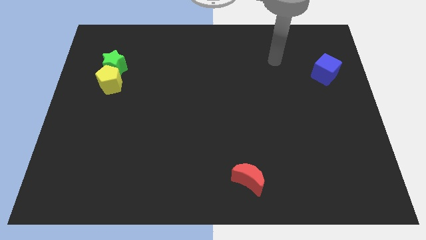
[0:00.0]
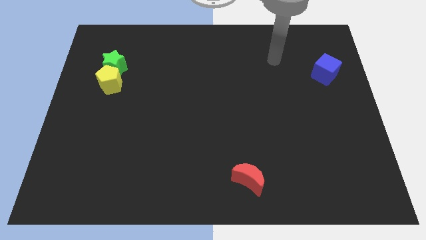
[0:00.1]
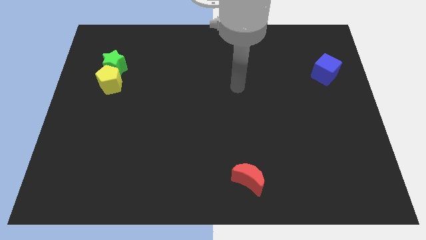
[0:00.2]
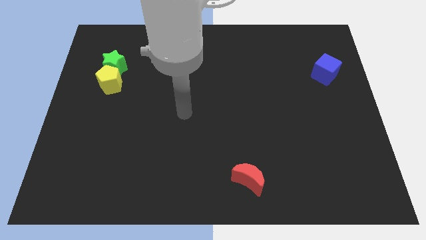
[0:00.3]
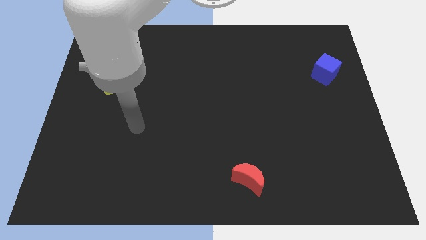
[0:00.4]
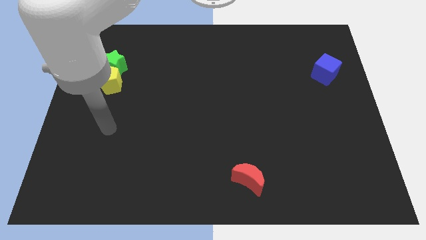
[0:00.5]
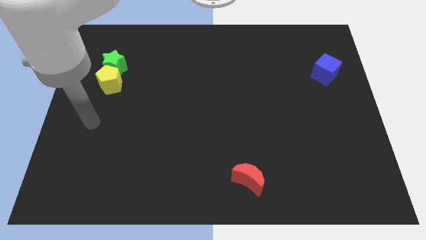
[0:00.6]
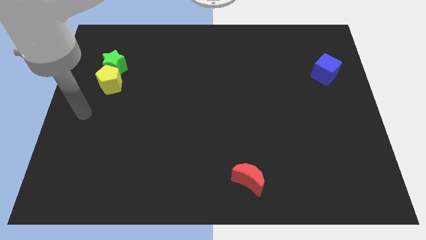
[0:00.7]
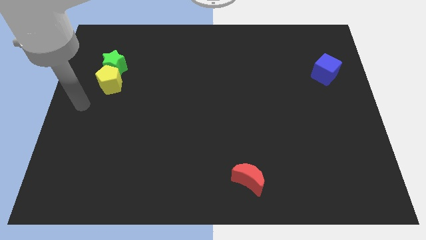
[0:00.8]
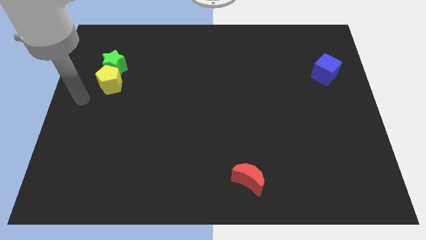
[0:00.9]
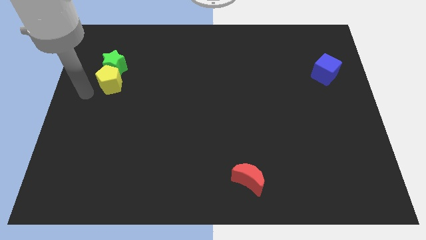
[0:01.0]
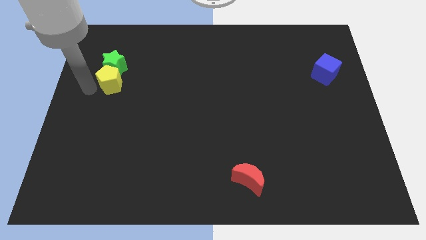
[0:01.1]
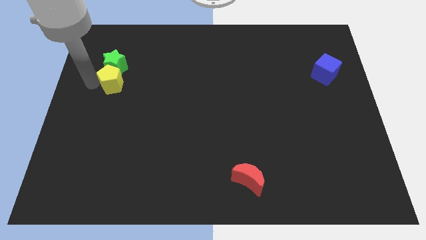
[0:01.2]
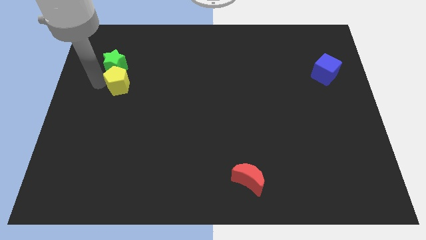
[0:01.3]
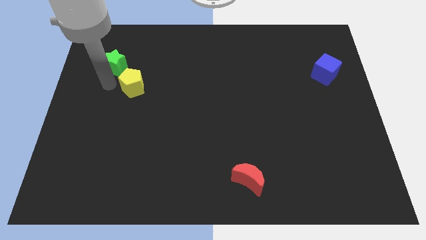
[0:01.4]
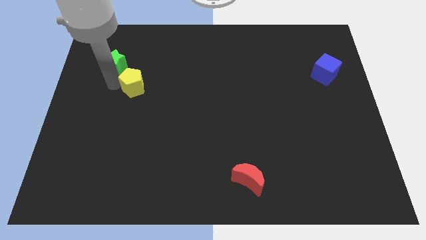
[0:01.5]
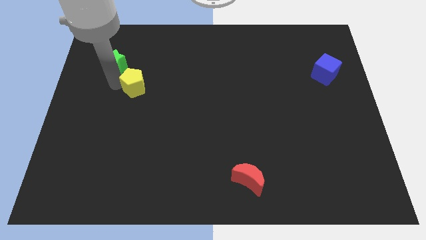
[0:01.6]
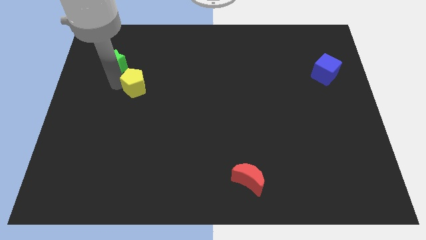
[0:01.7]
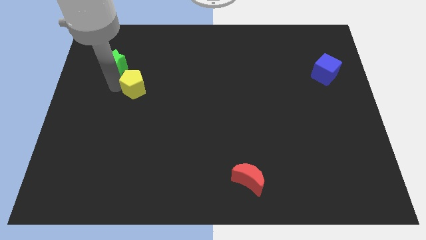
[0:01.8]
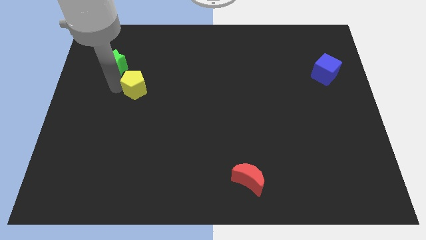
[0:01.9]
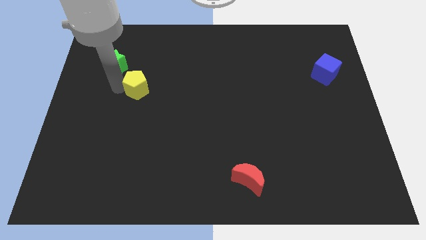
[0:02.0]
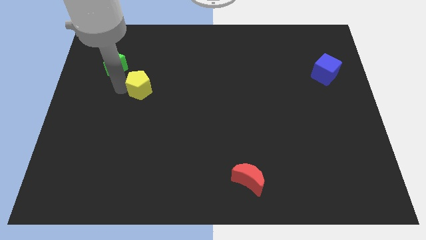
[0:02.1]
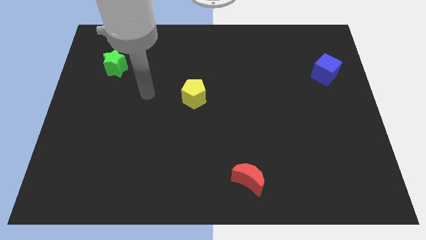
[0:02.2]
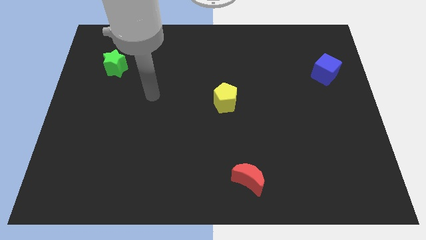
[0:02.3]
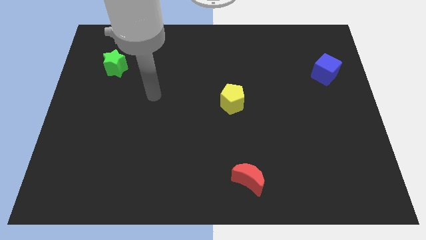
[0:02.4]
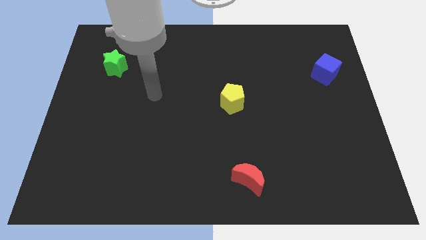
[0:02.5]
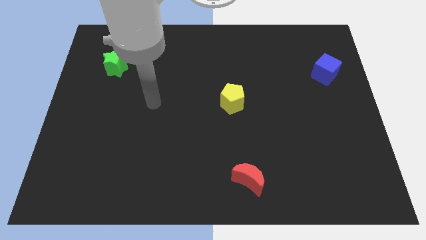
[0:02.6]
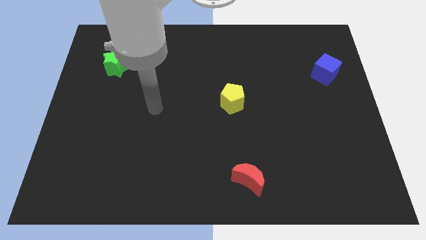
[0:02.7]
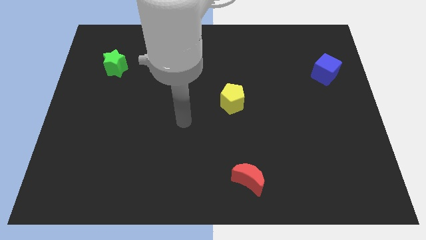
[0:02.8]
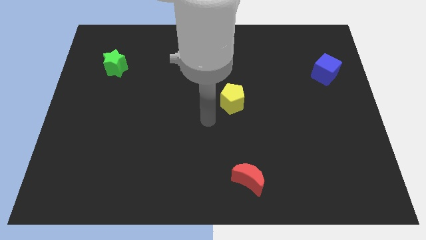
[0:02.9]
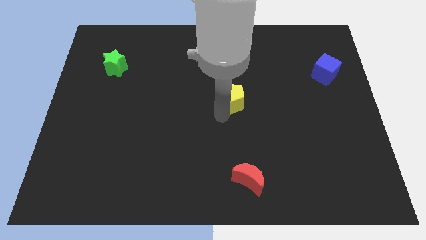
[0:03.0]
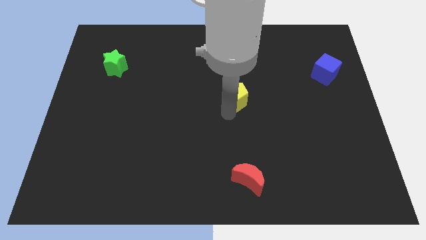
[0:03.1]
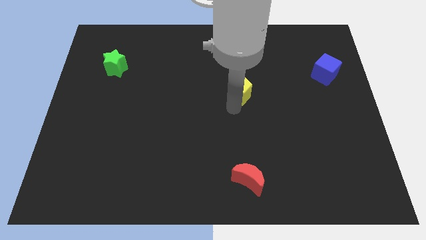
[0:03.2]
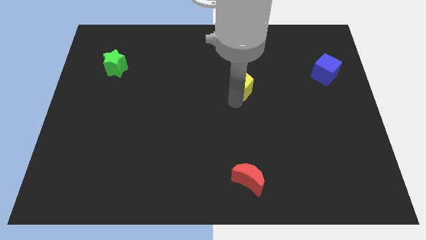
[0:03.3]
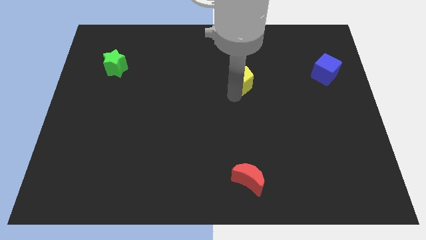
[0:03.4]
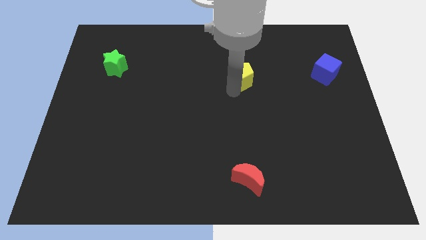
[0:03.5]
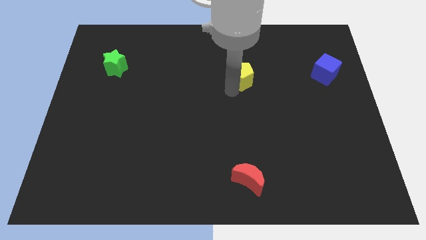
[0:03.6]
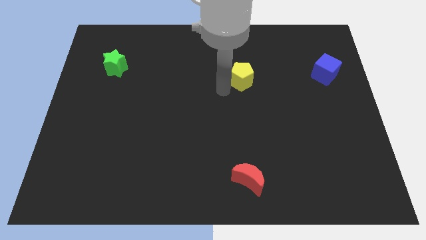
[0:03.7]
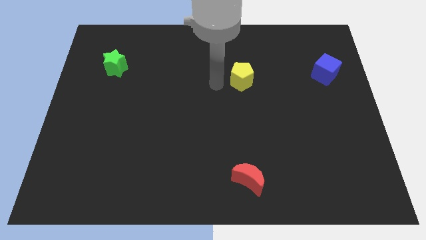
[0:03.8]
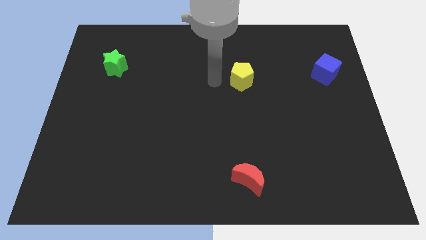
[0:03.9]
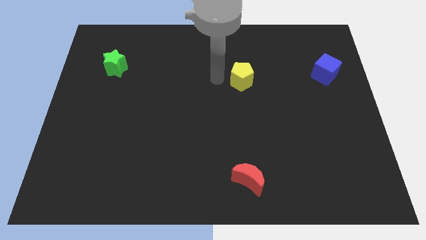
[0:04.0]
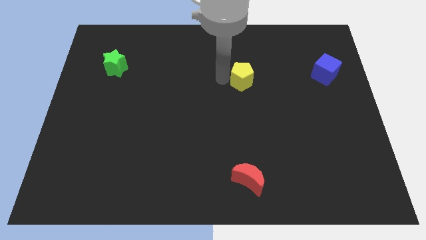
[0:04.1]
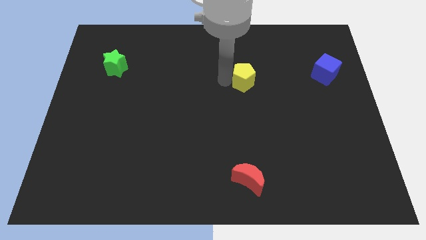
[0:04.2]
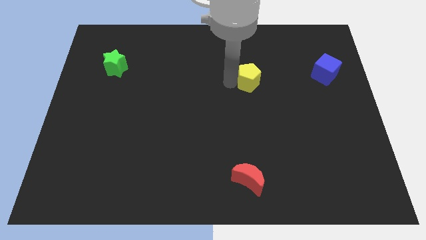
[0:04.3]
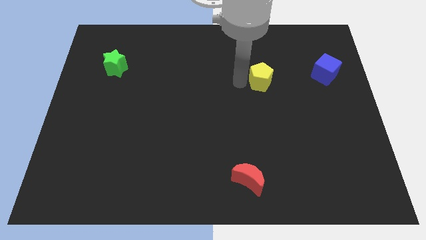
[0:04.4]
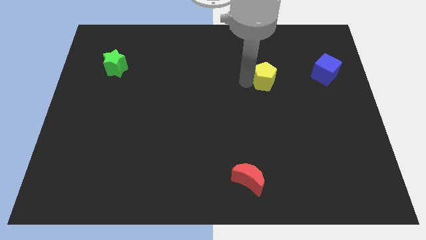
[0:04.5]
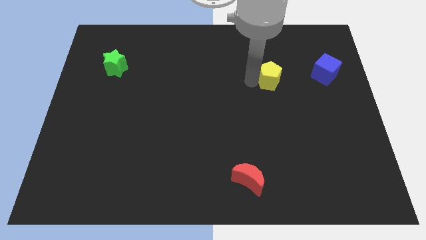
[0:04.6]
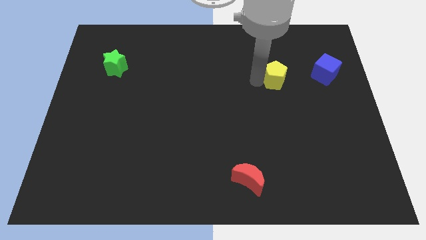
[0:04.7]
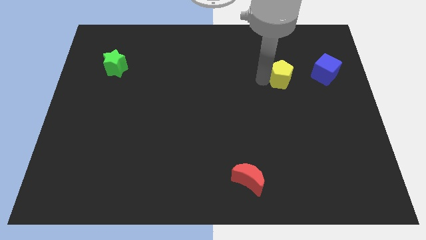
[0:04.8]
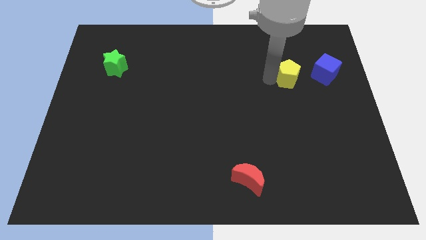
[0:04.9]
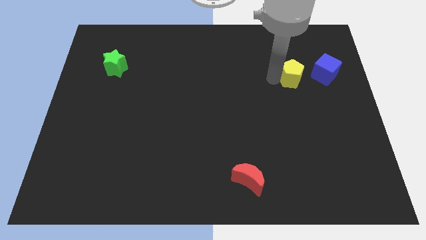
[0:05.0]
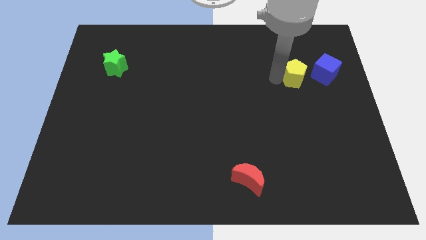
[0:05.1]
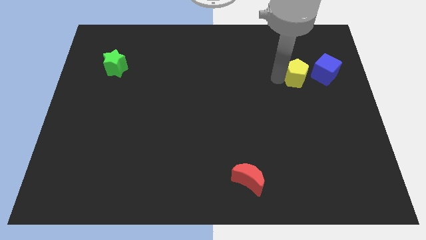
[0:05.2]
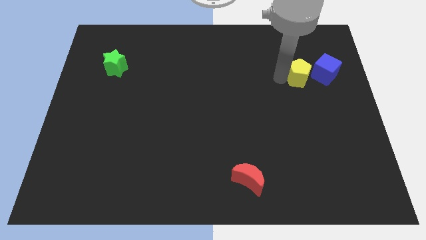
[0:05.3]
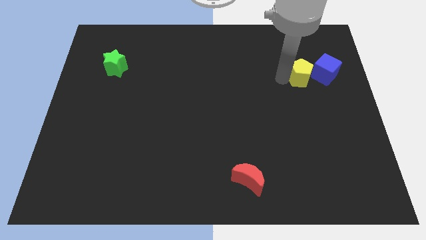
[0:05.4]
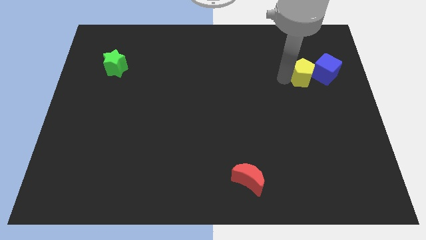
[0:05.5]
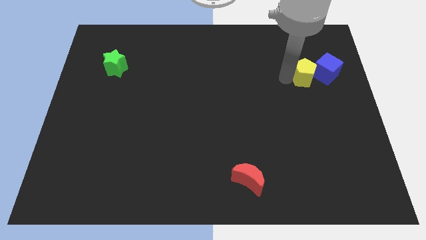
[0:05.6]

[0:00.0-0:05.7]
move the yellow block to the cube

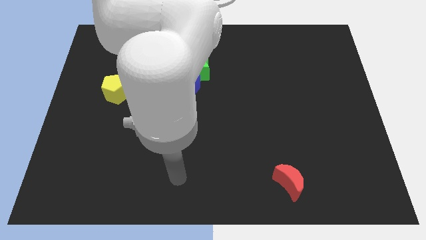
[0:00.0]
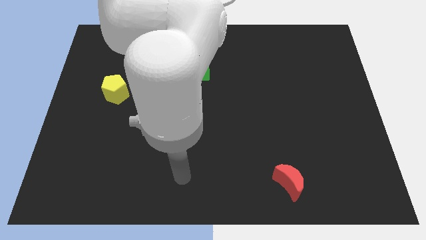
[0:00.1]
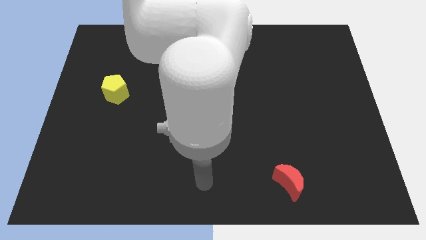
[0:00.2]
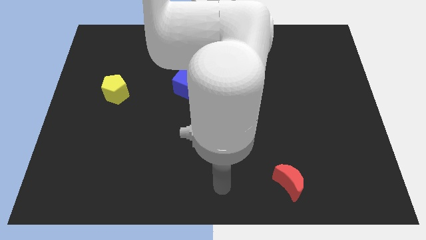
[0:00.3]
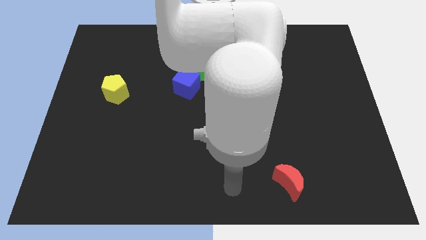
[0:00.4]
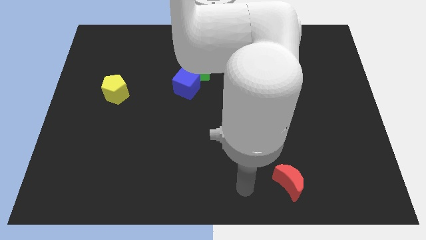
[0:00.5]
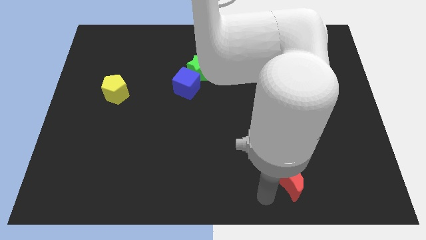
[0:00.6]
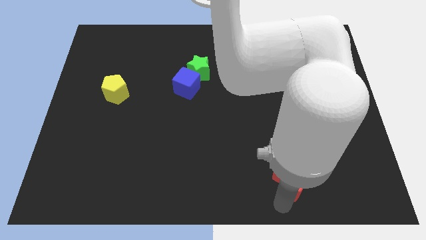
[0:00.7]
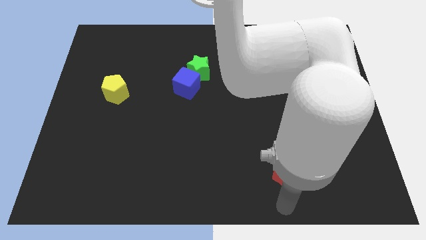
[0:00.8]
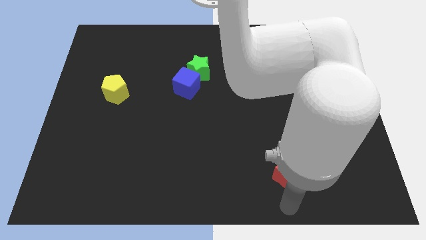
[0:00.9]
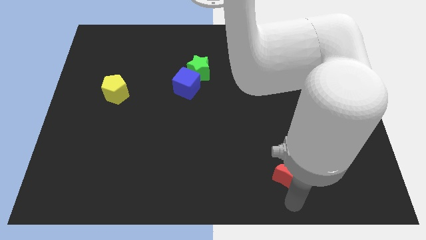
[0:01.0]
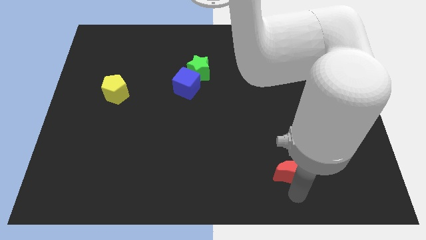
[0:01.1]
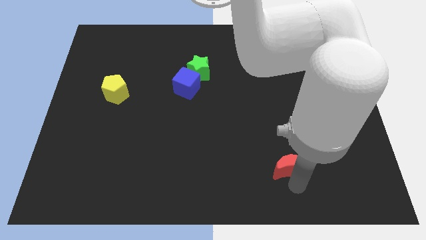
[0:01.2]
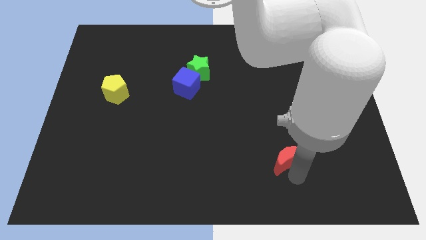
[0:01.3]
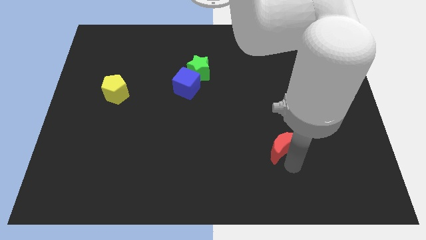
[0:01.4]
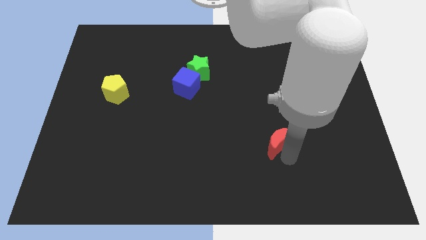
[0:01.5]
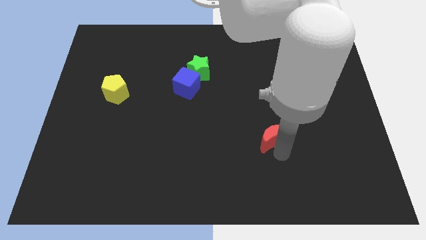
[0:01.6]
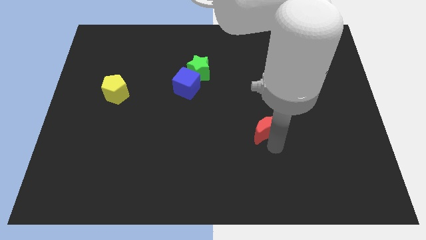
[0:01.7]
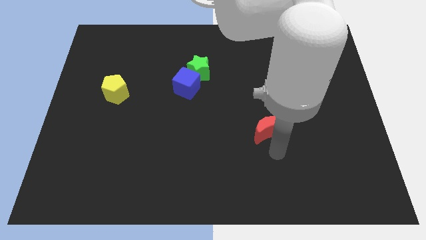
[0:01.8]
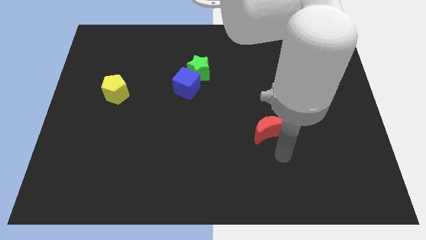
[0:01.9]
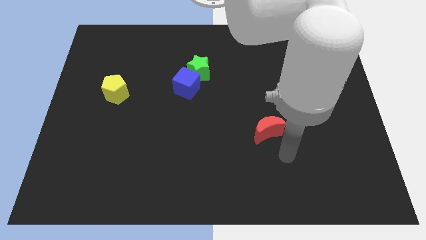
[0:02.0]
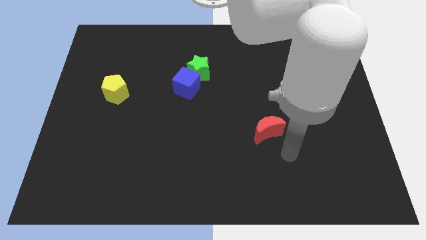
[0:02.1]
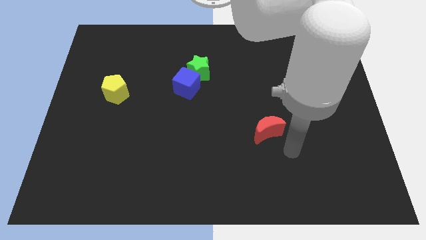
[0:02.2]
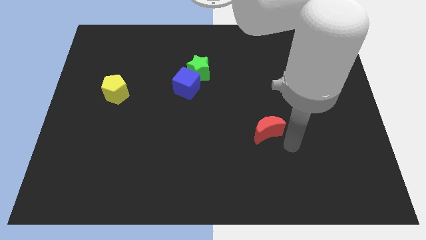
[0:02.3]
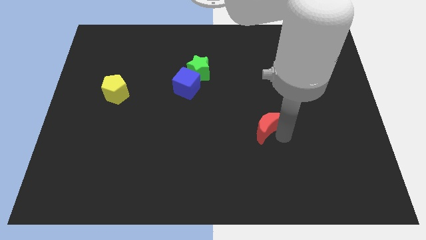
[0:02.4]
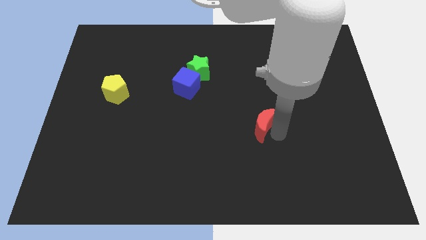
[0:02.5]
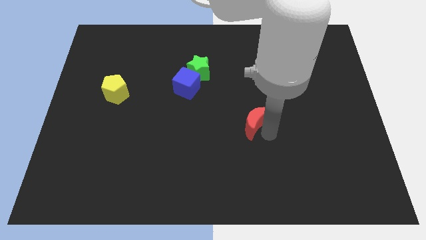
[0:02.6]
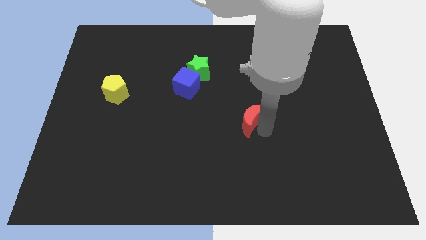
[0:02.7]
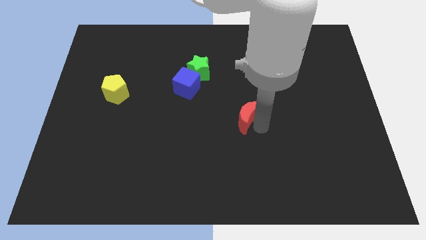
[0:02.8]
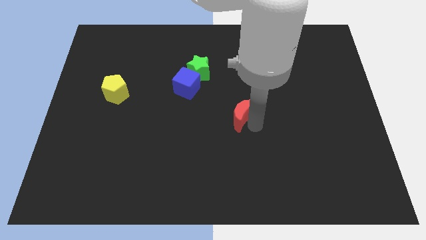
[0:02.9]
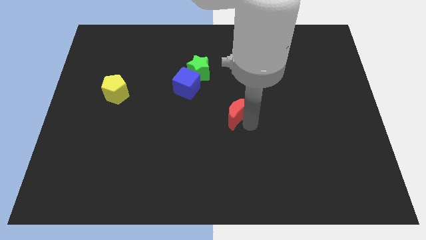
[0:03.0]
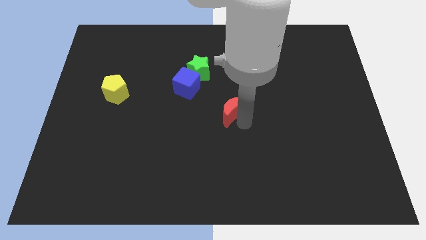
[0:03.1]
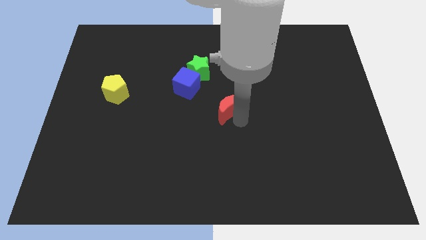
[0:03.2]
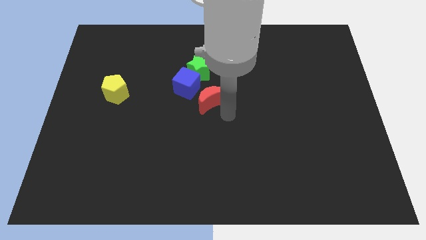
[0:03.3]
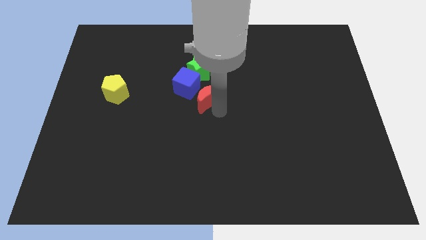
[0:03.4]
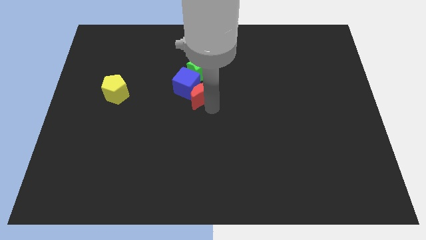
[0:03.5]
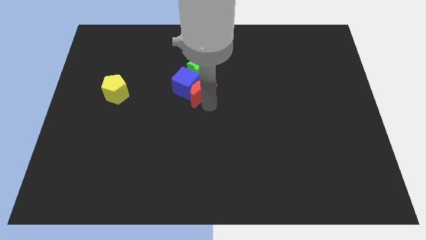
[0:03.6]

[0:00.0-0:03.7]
push the red block next to the blue block
